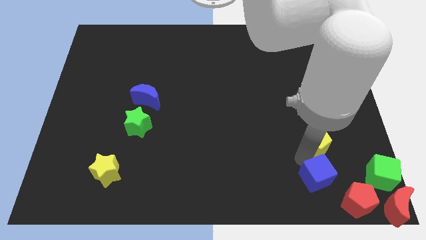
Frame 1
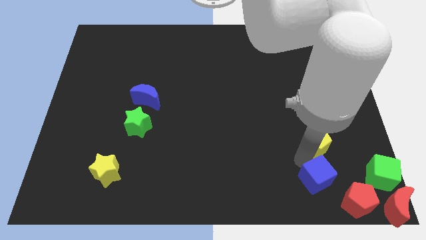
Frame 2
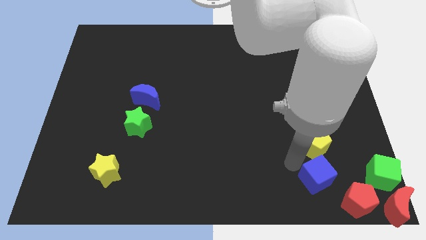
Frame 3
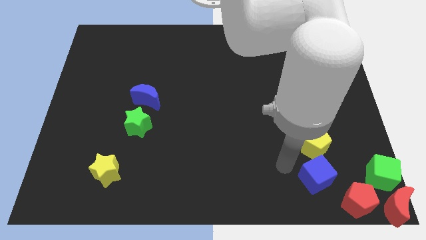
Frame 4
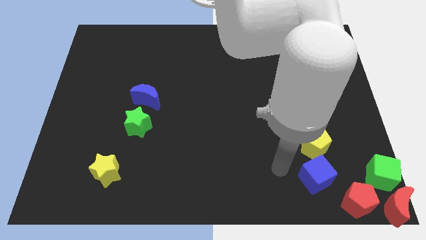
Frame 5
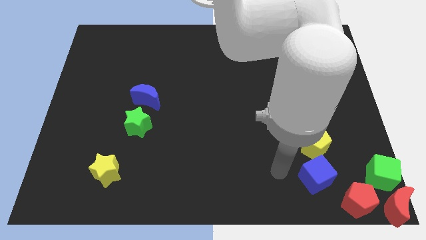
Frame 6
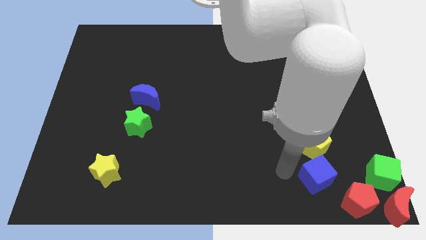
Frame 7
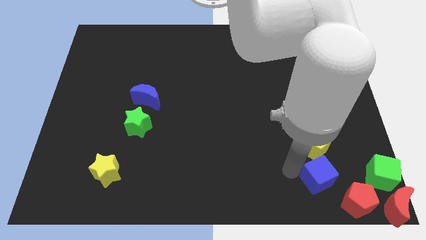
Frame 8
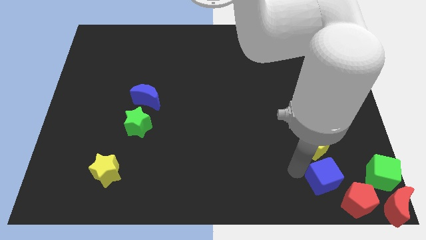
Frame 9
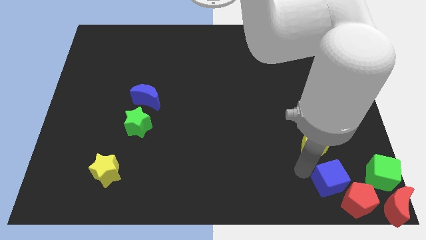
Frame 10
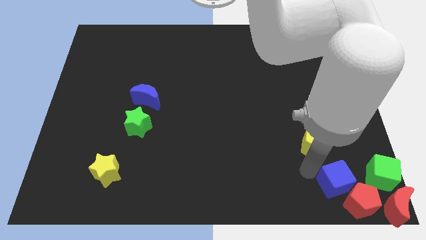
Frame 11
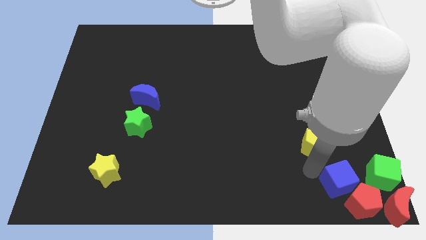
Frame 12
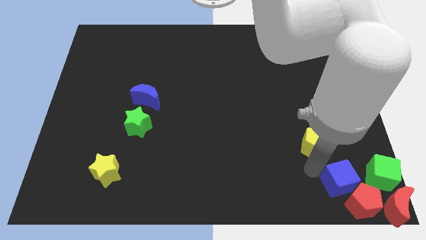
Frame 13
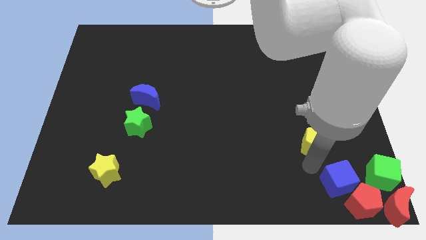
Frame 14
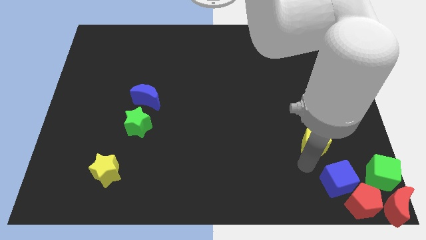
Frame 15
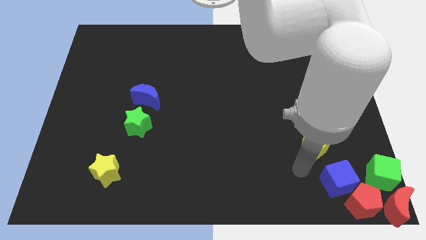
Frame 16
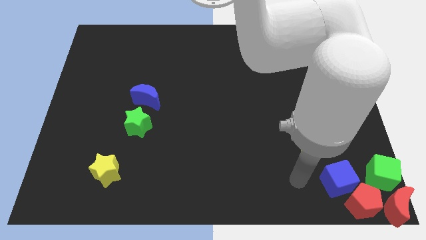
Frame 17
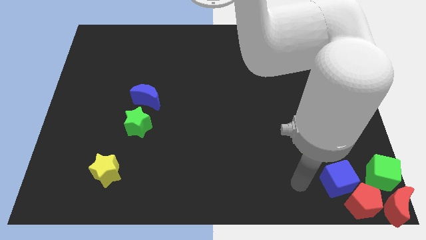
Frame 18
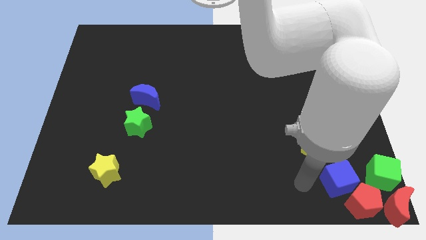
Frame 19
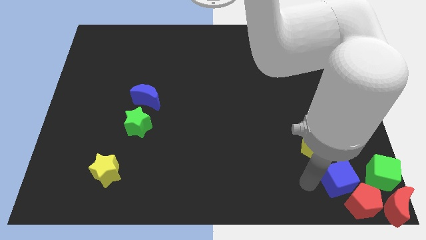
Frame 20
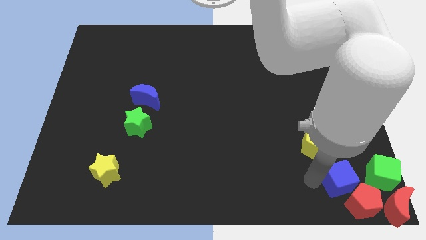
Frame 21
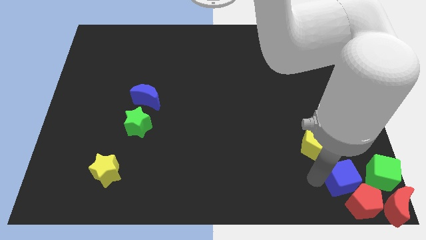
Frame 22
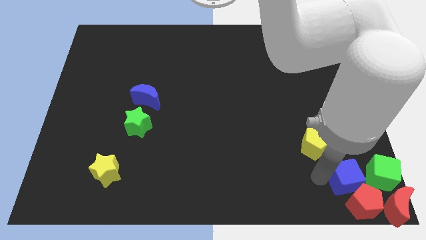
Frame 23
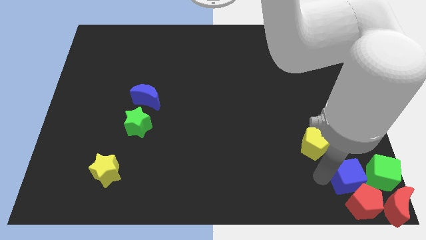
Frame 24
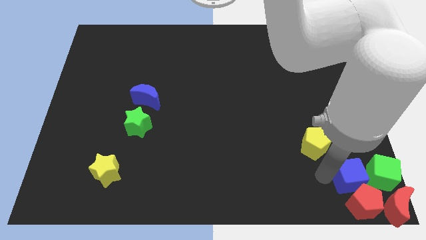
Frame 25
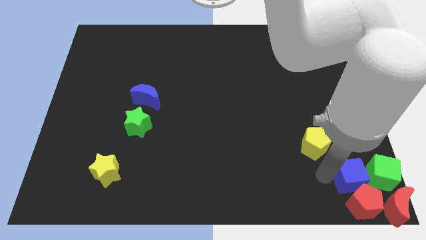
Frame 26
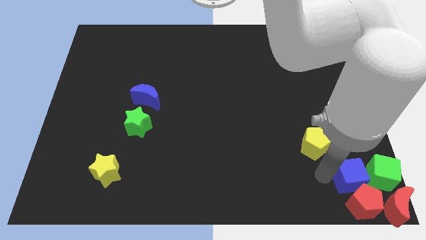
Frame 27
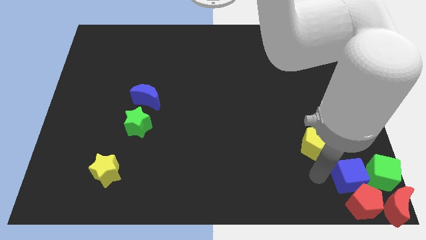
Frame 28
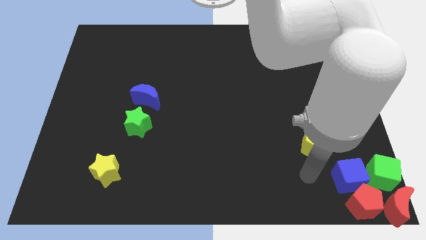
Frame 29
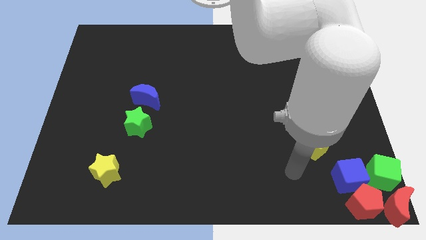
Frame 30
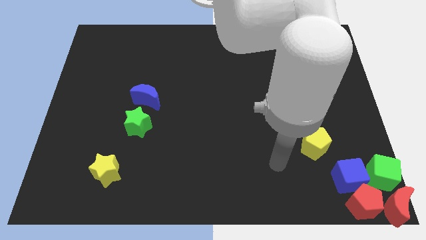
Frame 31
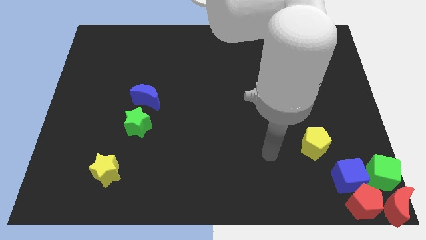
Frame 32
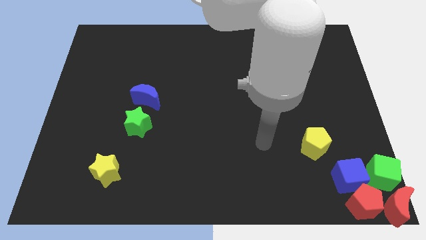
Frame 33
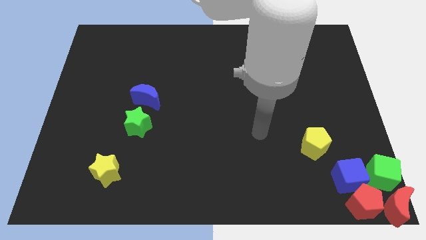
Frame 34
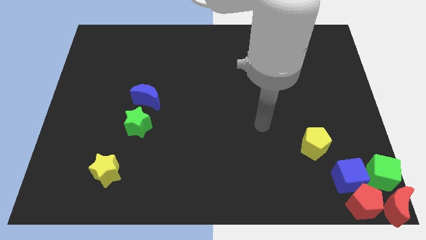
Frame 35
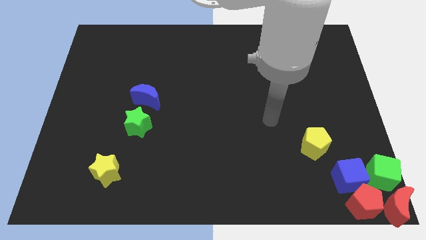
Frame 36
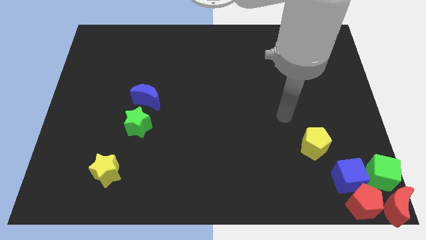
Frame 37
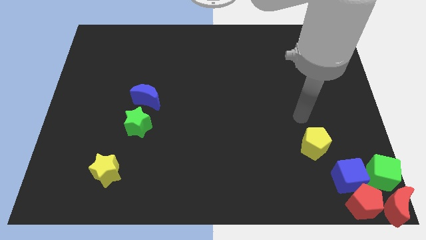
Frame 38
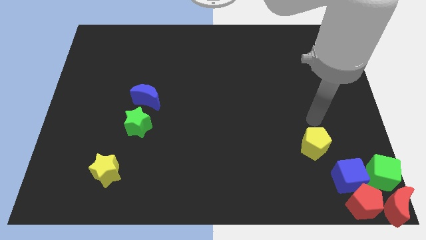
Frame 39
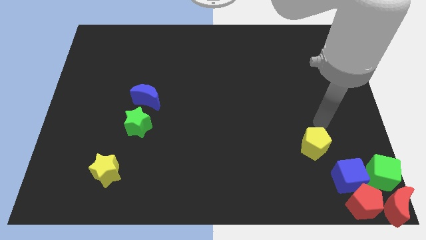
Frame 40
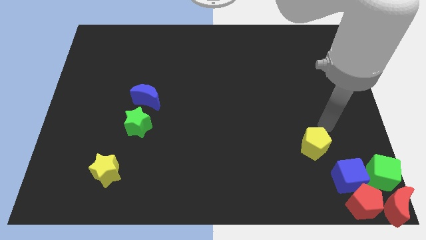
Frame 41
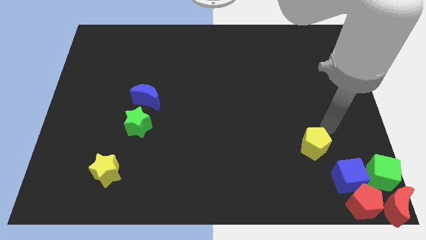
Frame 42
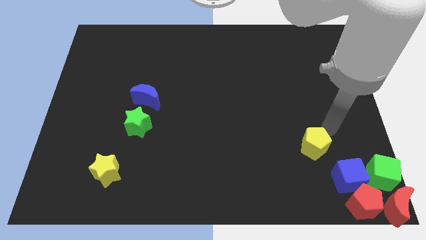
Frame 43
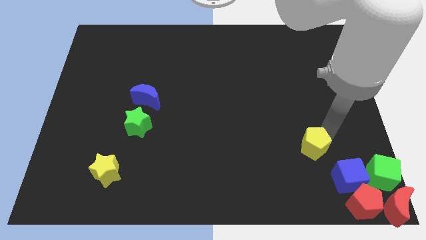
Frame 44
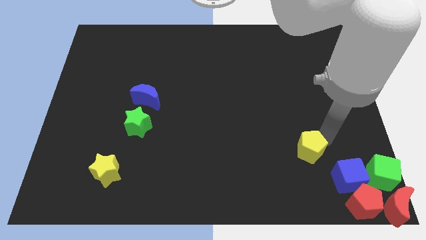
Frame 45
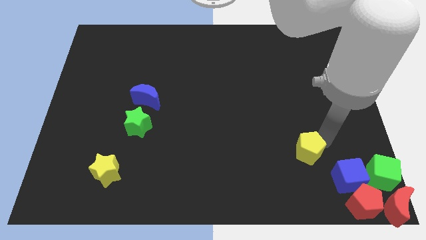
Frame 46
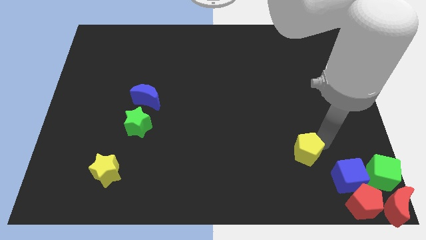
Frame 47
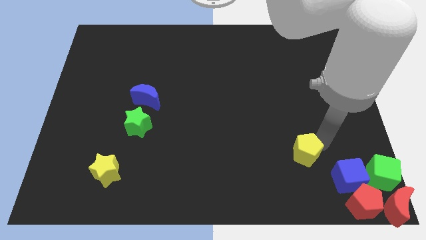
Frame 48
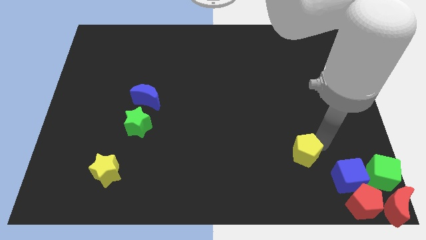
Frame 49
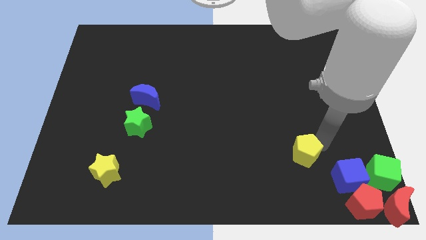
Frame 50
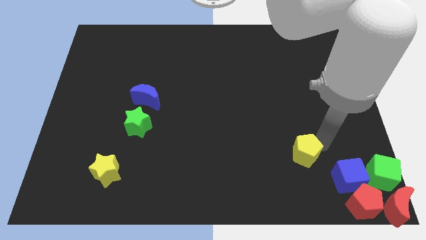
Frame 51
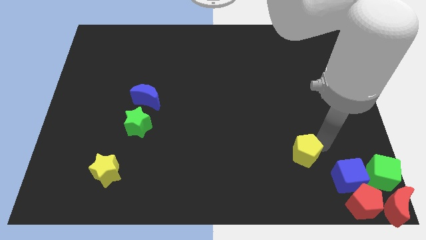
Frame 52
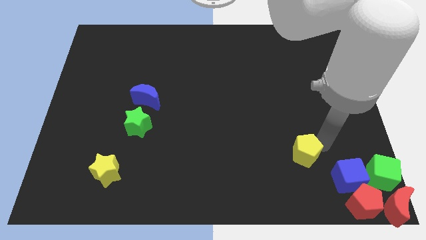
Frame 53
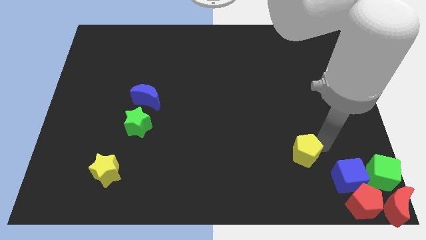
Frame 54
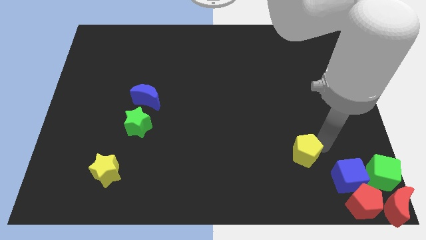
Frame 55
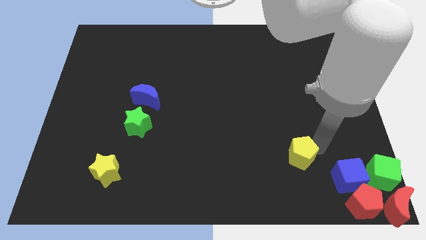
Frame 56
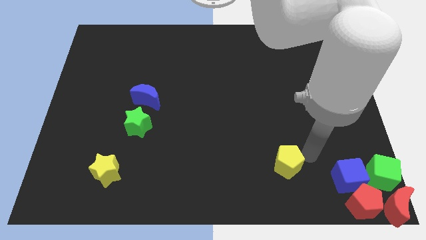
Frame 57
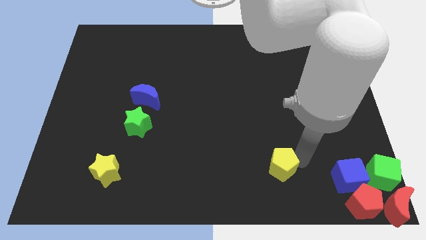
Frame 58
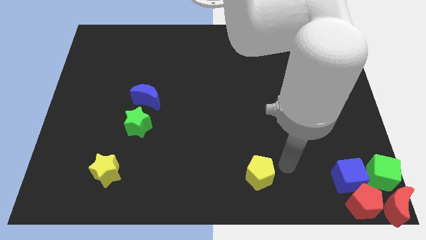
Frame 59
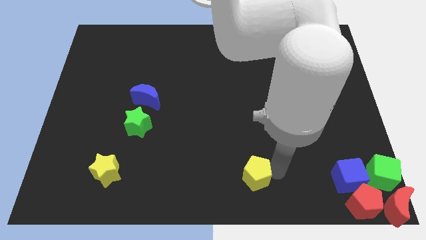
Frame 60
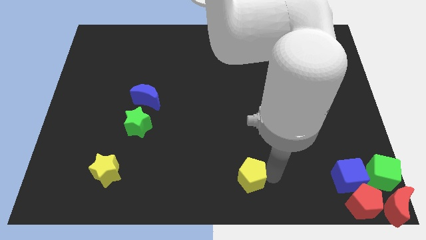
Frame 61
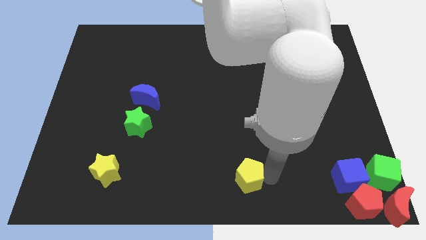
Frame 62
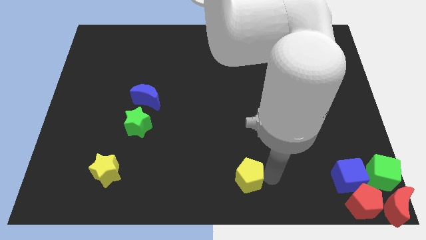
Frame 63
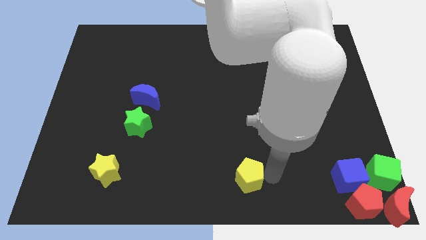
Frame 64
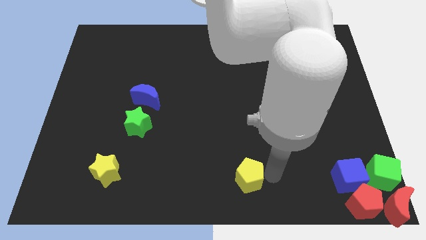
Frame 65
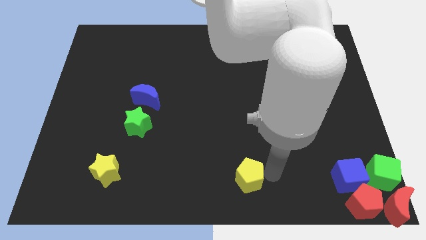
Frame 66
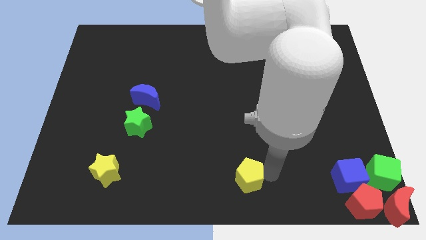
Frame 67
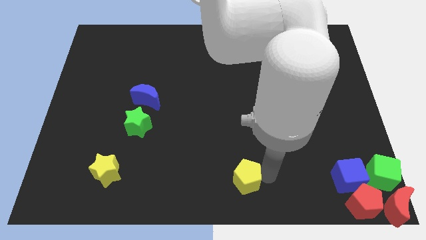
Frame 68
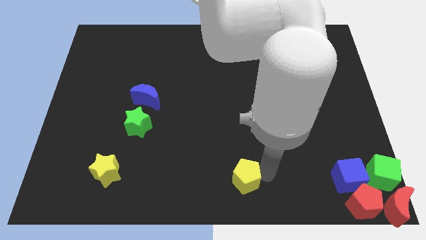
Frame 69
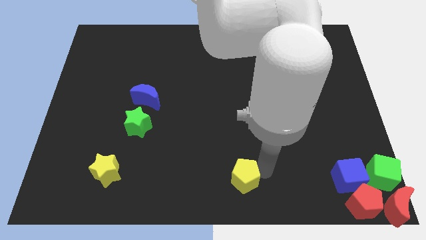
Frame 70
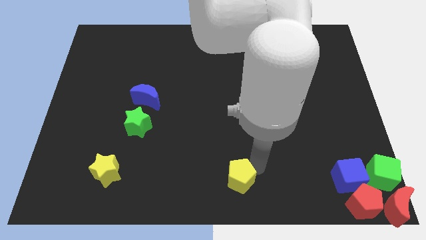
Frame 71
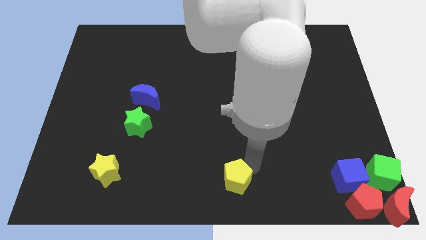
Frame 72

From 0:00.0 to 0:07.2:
separate the yellow pentagon from the blue cube

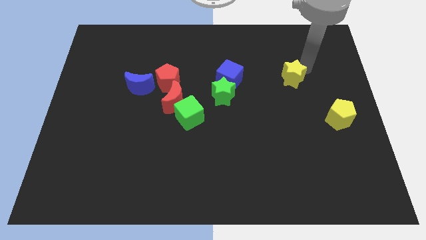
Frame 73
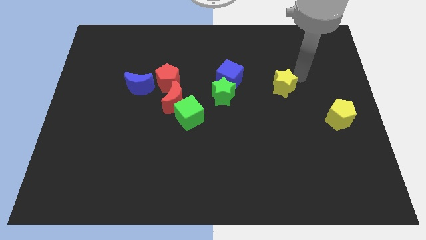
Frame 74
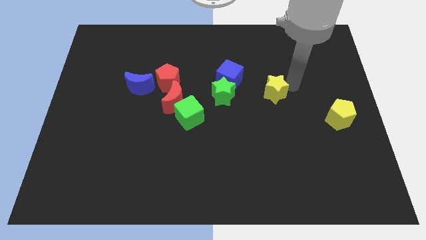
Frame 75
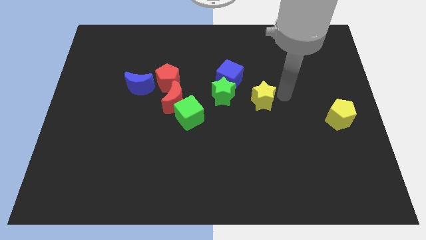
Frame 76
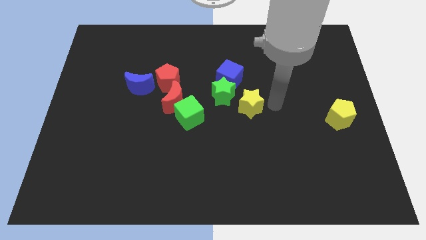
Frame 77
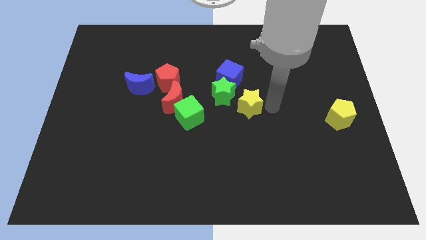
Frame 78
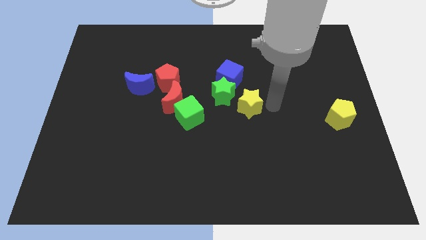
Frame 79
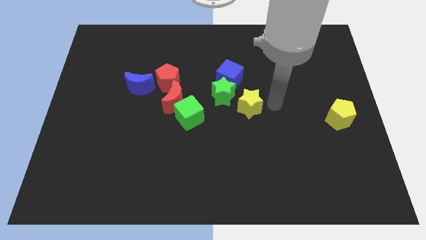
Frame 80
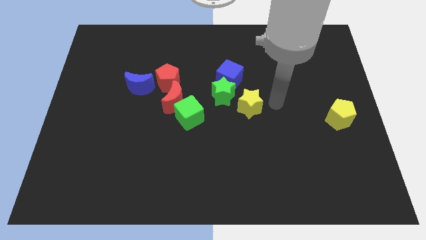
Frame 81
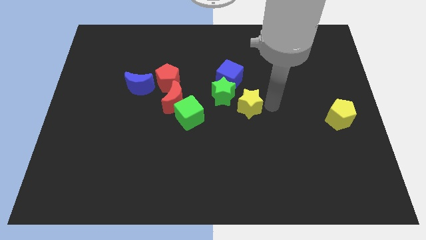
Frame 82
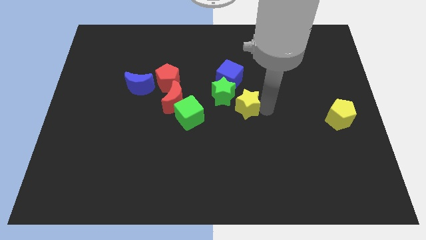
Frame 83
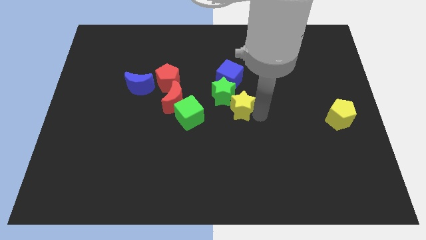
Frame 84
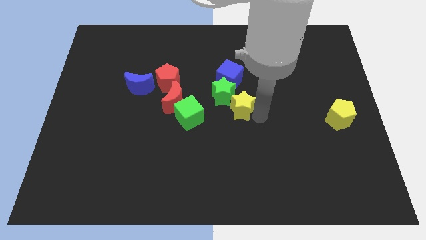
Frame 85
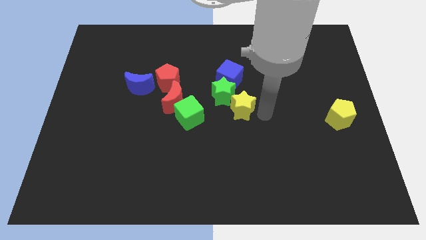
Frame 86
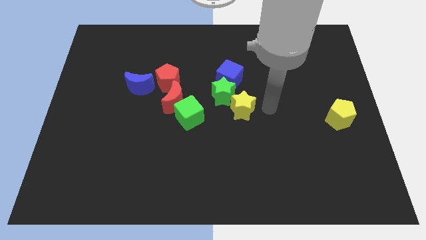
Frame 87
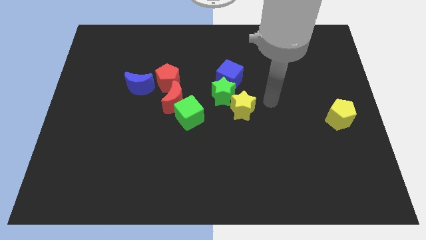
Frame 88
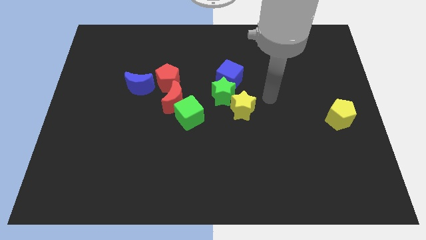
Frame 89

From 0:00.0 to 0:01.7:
move the yellow star closer to the green star

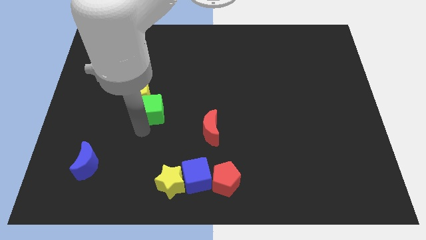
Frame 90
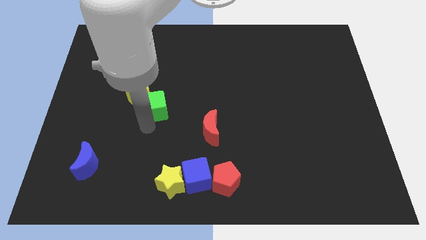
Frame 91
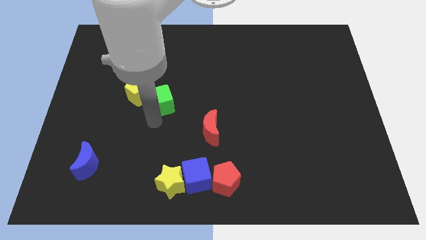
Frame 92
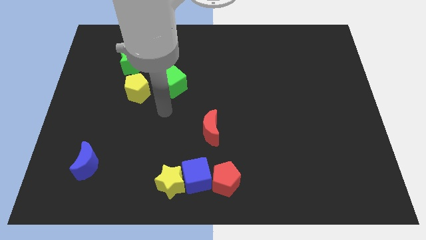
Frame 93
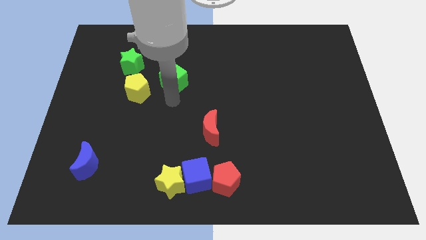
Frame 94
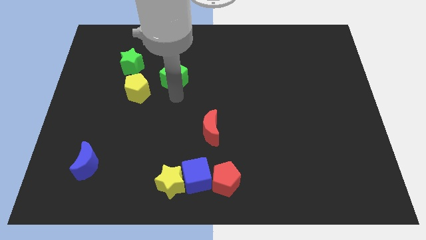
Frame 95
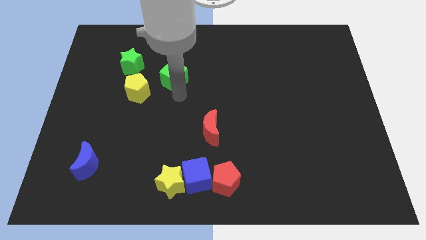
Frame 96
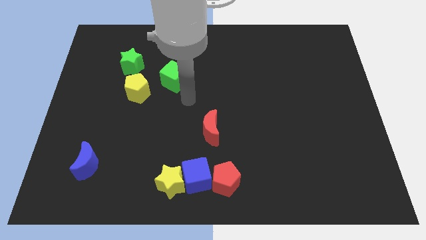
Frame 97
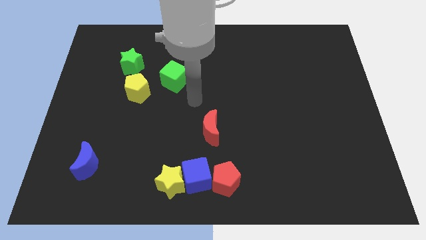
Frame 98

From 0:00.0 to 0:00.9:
move the green cube away from the yellow pentagon
